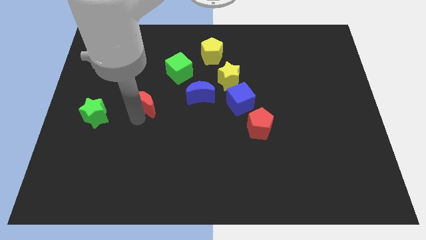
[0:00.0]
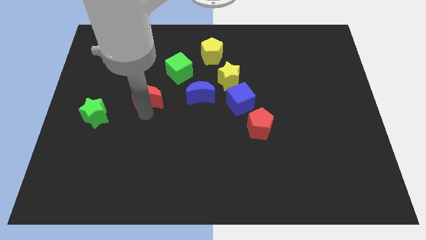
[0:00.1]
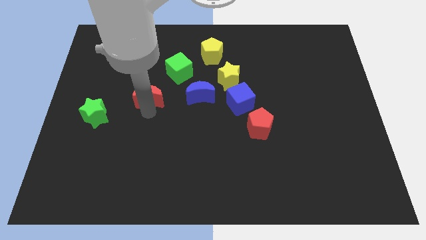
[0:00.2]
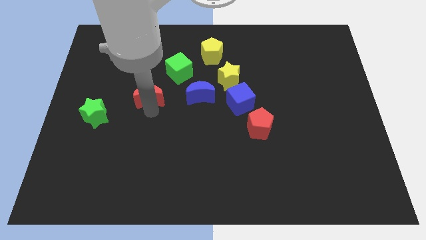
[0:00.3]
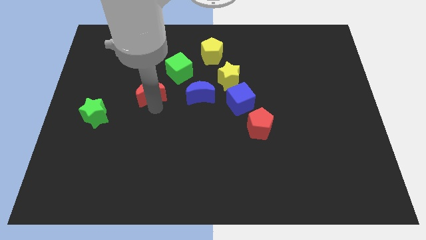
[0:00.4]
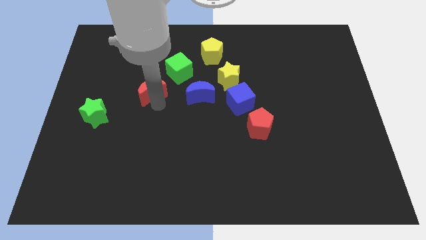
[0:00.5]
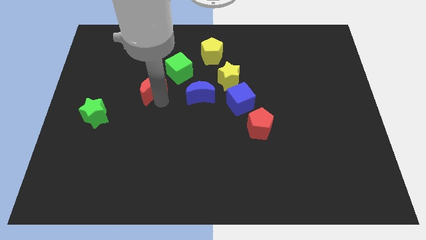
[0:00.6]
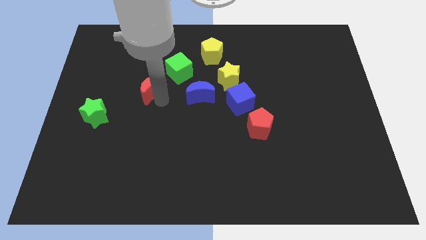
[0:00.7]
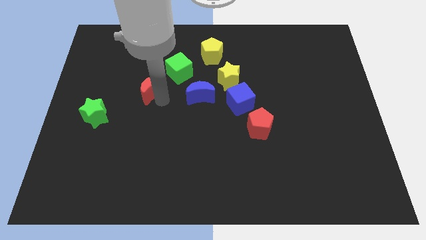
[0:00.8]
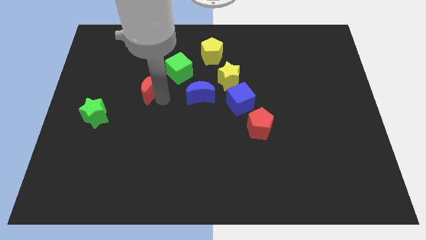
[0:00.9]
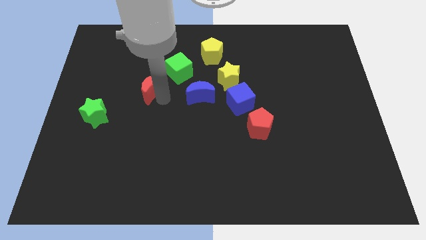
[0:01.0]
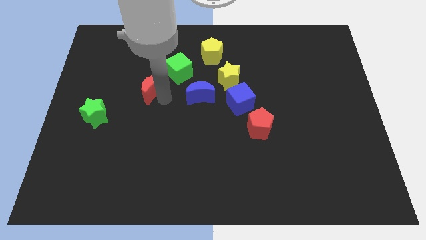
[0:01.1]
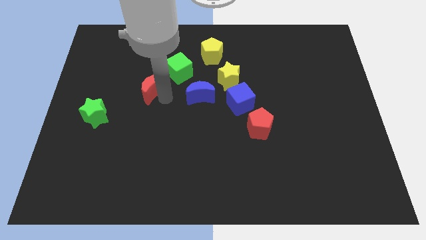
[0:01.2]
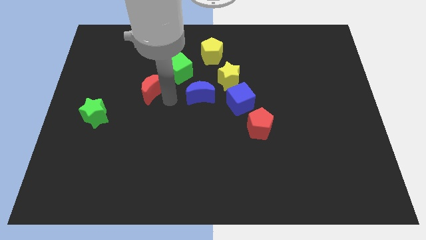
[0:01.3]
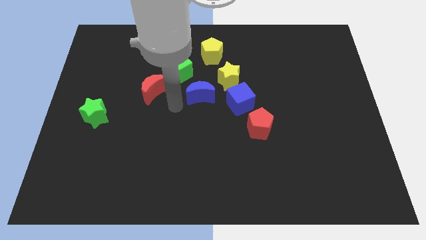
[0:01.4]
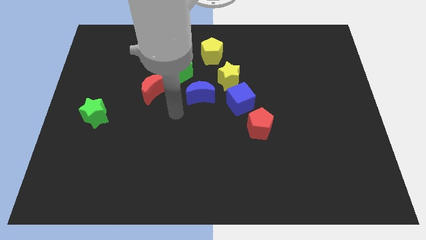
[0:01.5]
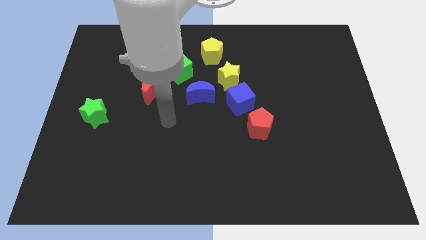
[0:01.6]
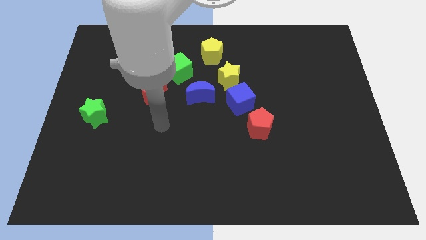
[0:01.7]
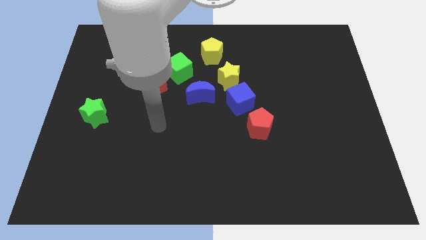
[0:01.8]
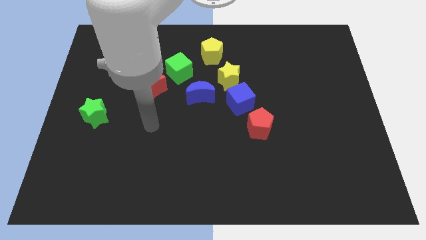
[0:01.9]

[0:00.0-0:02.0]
push the red crescent close to the left of the green cube

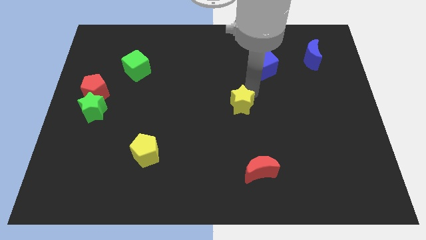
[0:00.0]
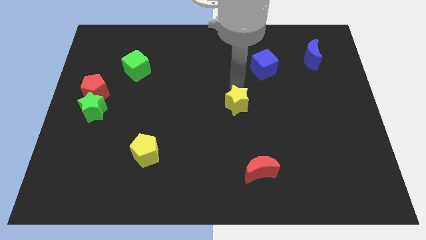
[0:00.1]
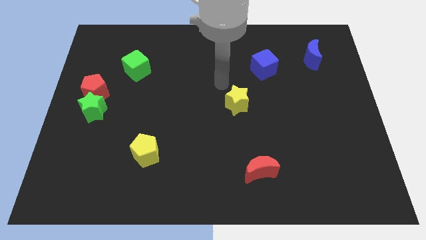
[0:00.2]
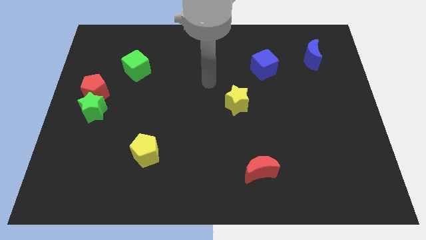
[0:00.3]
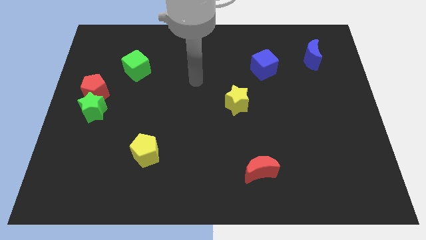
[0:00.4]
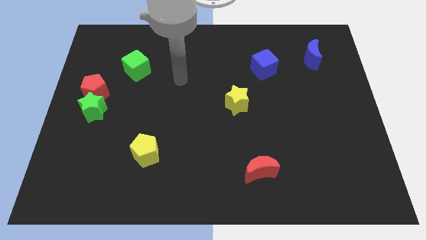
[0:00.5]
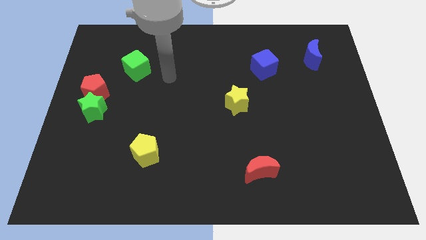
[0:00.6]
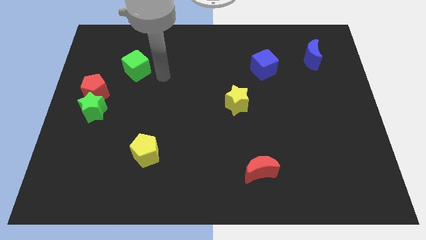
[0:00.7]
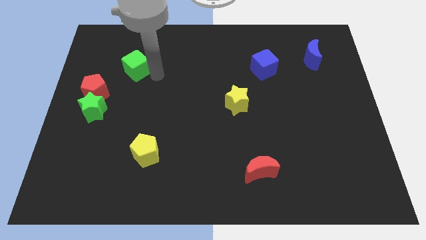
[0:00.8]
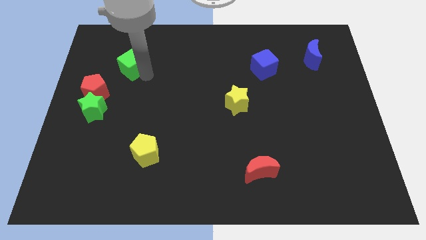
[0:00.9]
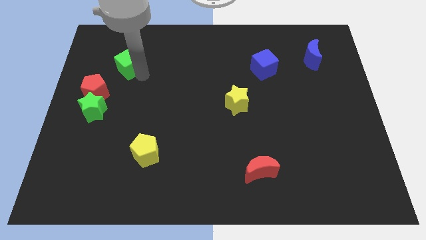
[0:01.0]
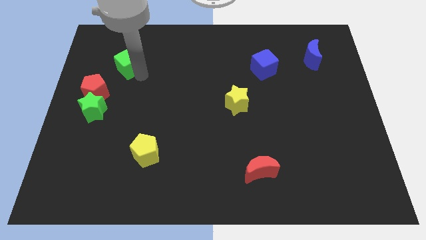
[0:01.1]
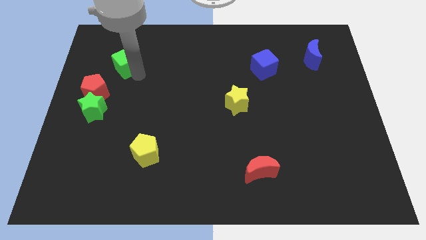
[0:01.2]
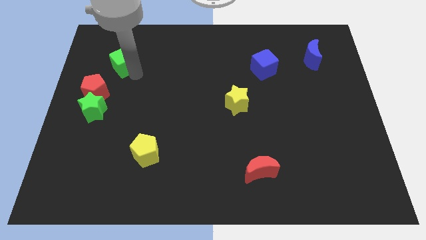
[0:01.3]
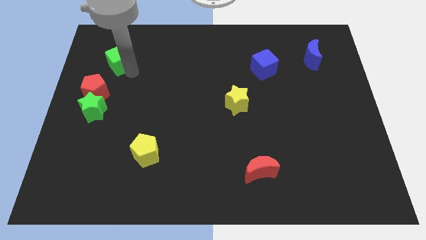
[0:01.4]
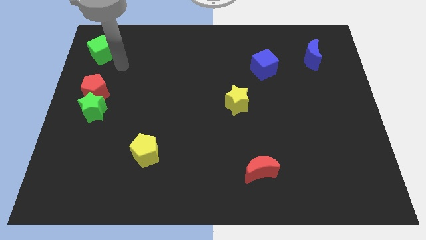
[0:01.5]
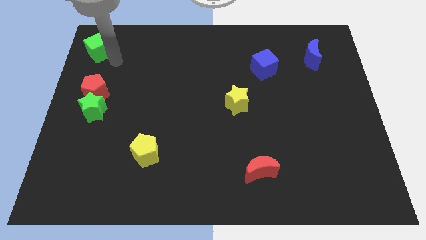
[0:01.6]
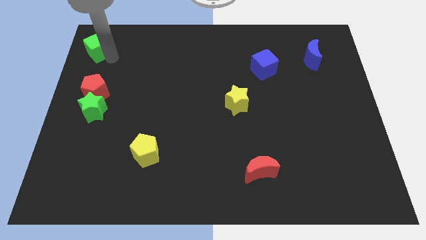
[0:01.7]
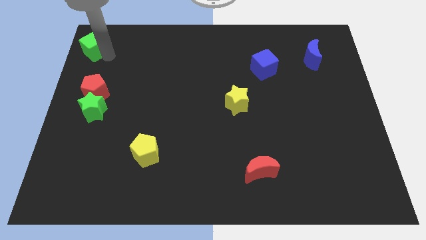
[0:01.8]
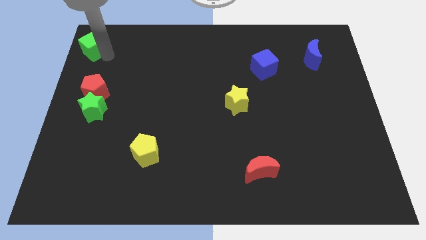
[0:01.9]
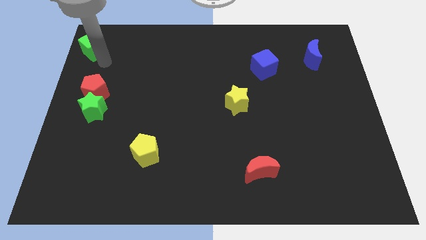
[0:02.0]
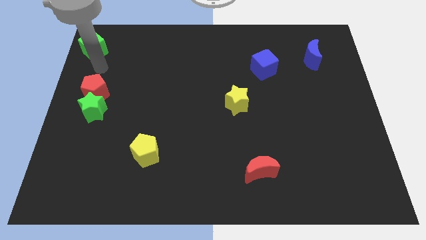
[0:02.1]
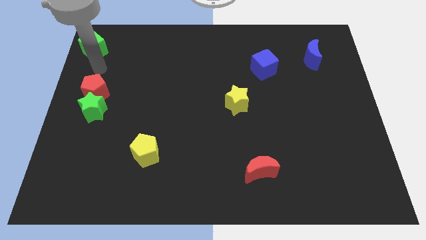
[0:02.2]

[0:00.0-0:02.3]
move green cube to top left corner

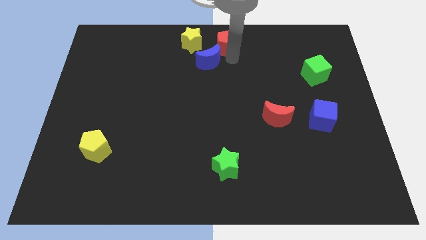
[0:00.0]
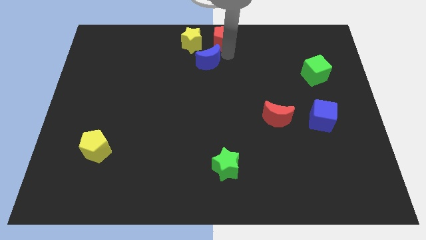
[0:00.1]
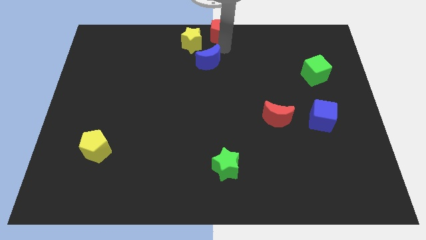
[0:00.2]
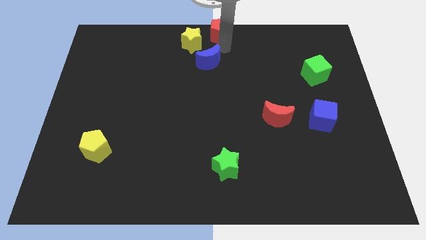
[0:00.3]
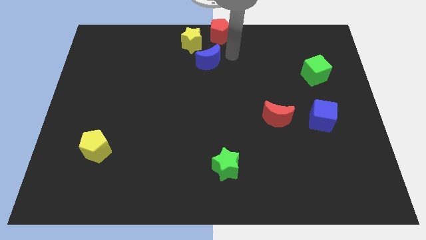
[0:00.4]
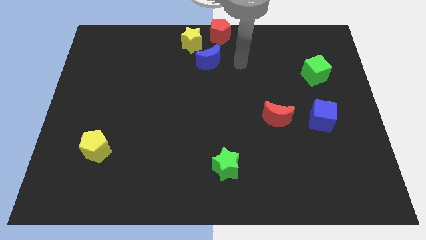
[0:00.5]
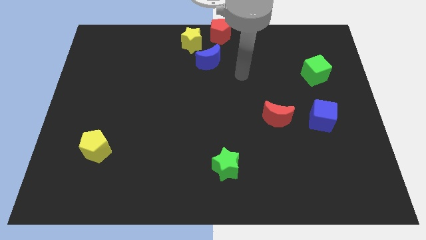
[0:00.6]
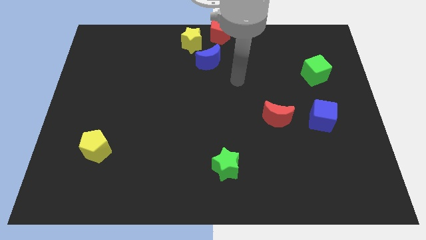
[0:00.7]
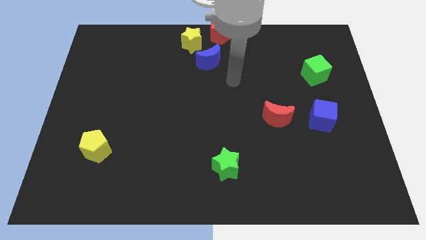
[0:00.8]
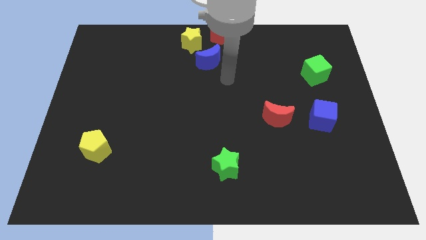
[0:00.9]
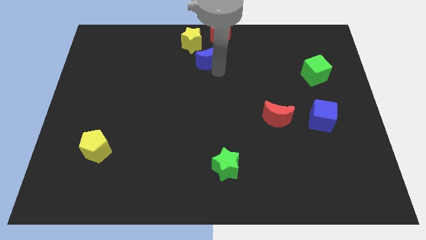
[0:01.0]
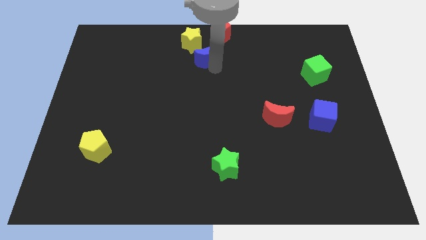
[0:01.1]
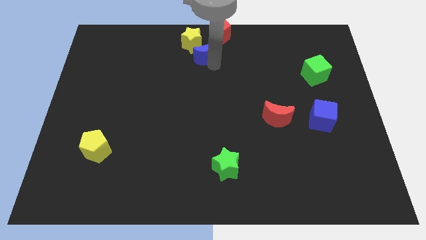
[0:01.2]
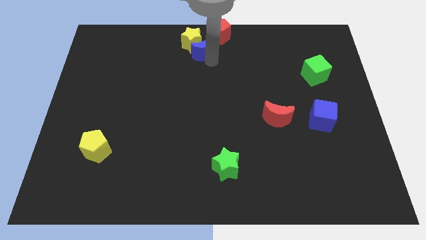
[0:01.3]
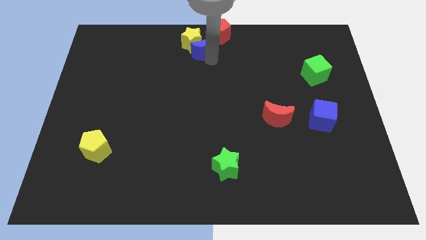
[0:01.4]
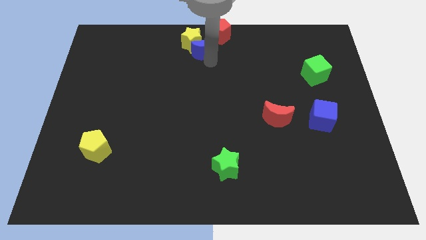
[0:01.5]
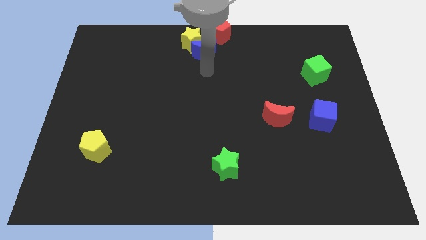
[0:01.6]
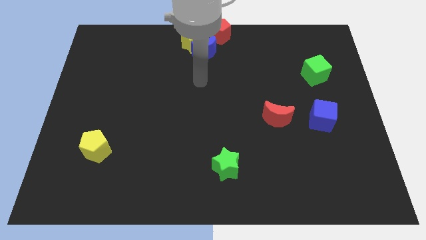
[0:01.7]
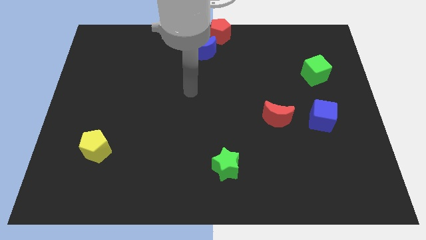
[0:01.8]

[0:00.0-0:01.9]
push the blue moon into the yellow star

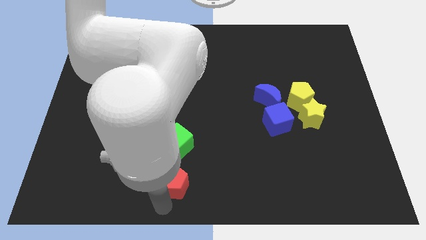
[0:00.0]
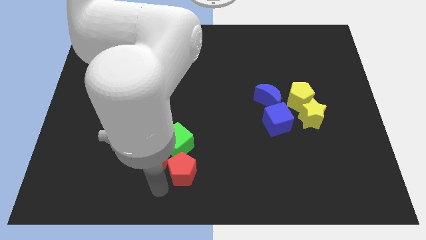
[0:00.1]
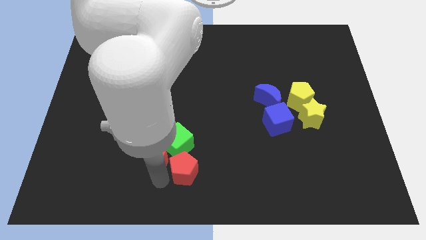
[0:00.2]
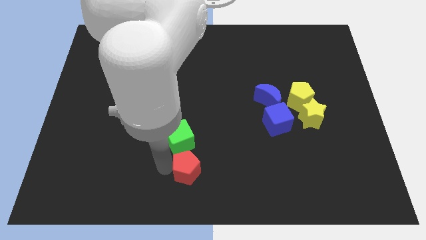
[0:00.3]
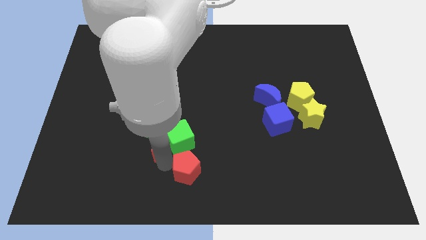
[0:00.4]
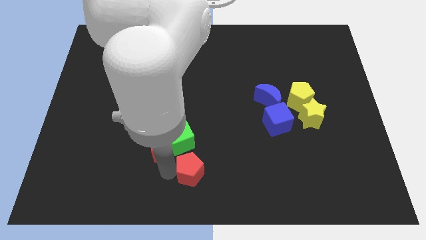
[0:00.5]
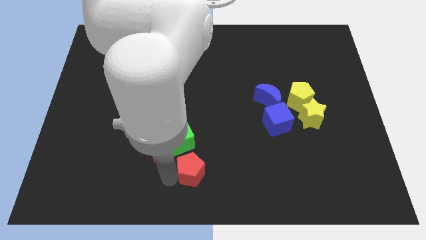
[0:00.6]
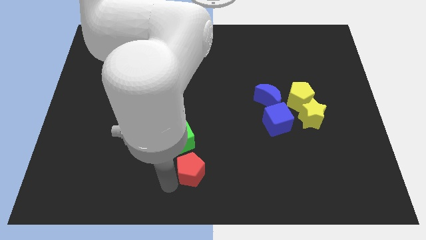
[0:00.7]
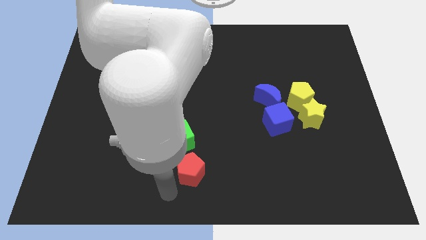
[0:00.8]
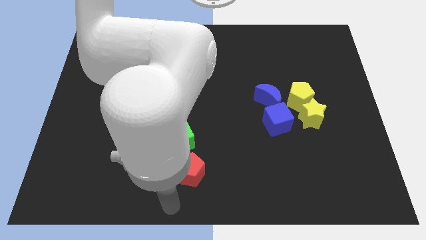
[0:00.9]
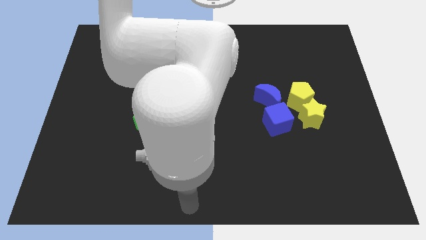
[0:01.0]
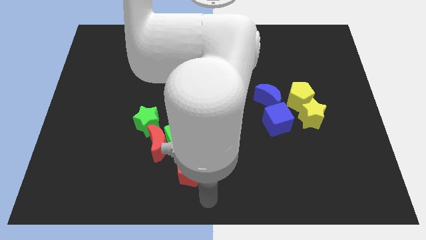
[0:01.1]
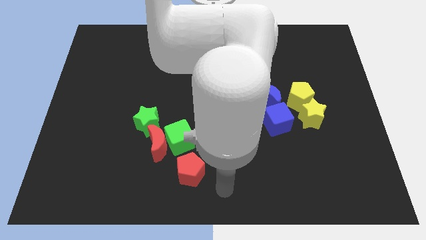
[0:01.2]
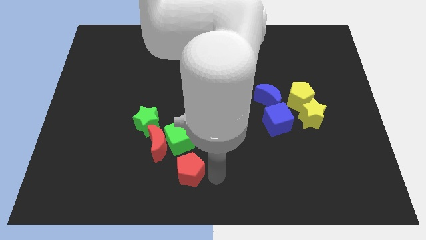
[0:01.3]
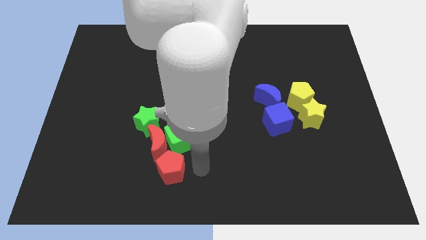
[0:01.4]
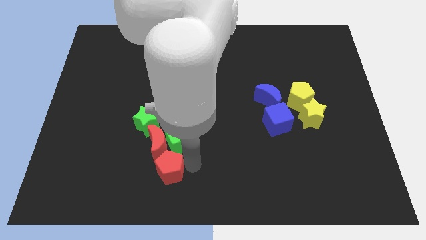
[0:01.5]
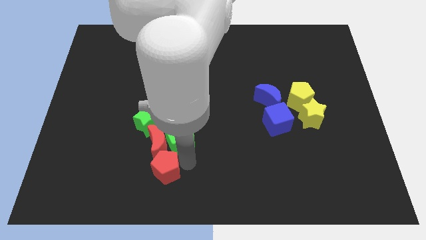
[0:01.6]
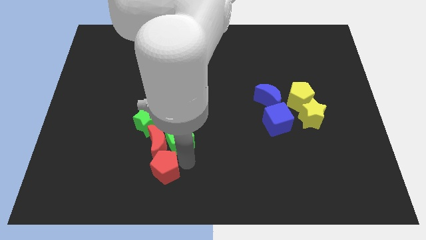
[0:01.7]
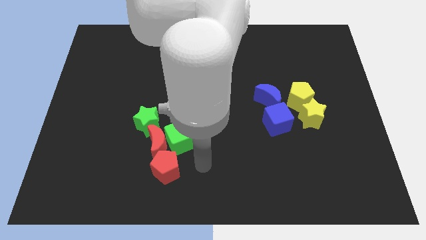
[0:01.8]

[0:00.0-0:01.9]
move the red pentagon into red moon

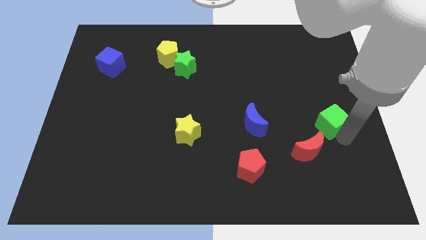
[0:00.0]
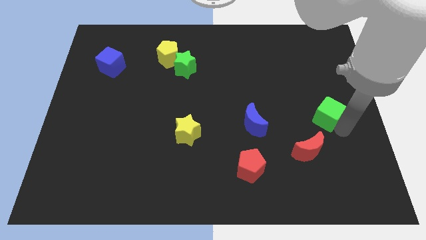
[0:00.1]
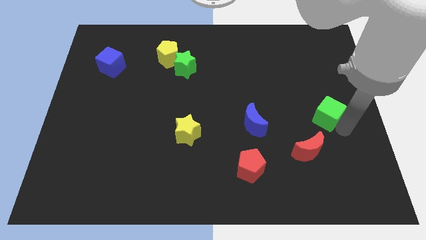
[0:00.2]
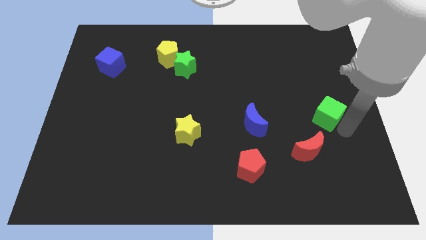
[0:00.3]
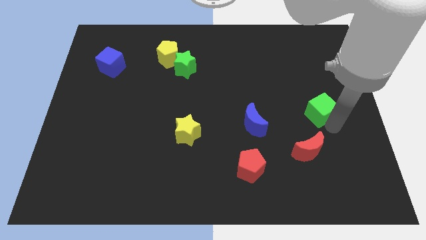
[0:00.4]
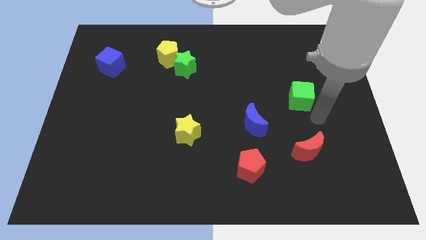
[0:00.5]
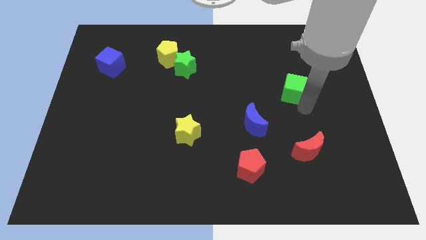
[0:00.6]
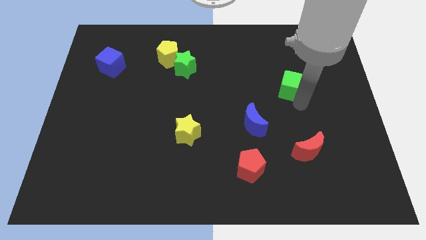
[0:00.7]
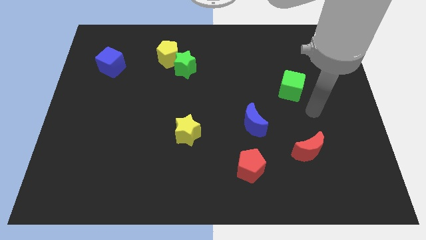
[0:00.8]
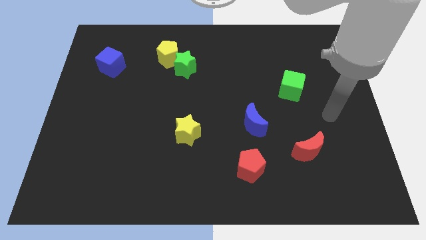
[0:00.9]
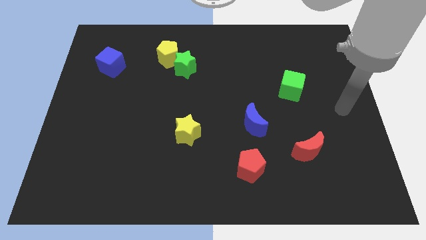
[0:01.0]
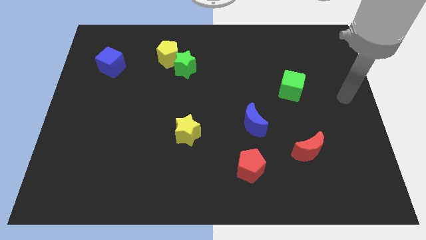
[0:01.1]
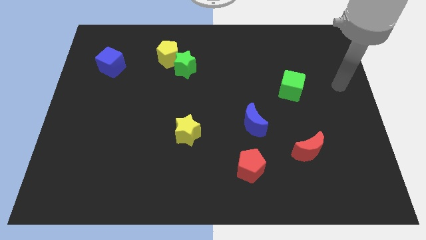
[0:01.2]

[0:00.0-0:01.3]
move the green cube vertically to the top of the red crescent
